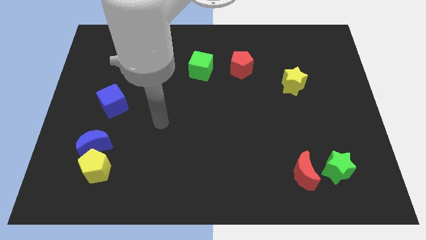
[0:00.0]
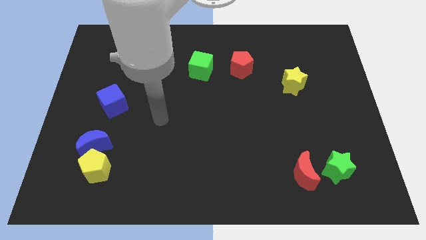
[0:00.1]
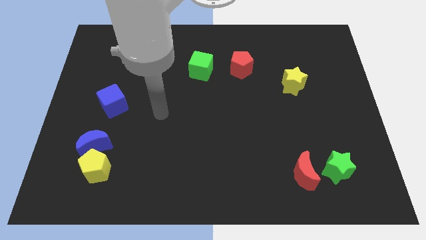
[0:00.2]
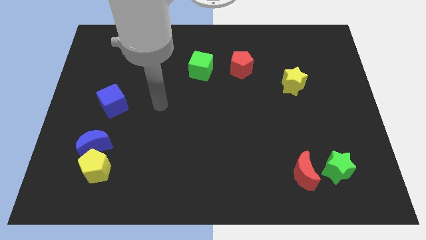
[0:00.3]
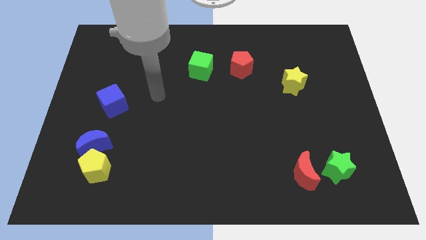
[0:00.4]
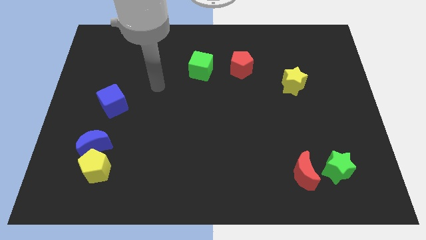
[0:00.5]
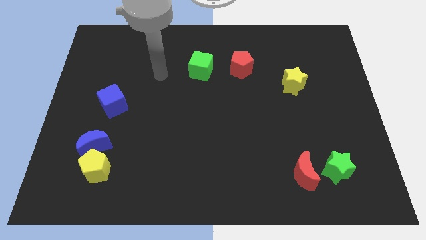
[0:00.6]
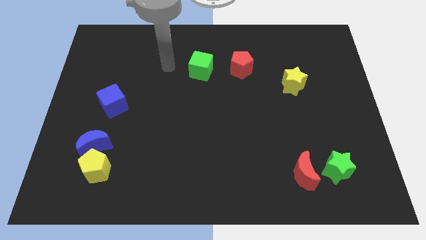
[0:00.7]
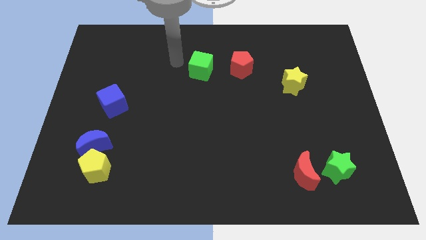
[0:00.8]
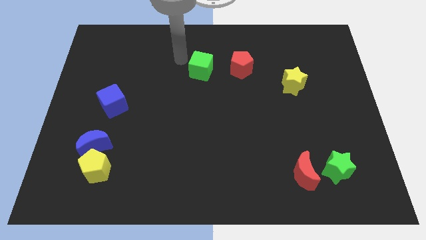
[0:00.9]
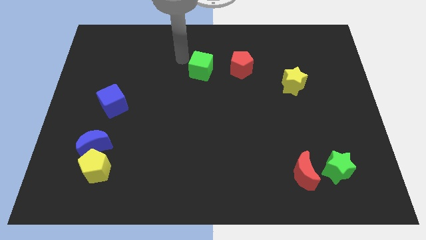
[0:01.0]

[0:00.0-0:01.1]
place the arm to the left of the green cube

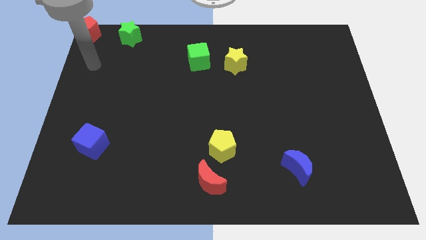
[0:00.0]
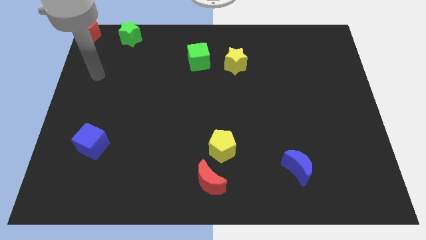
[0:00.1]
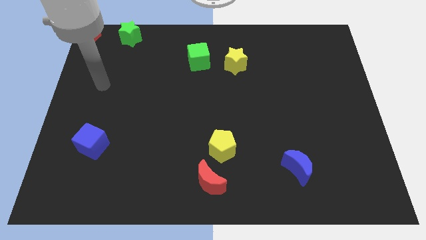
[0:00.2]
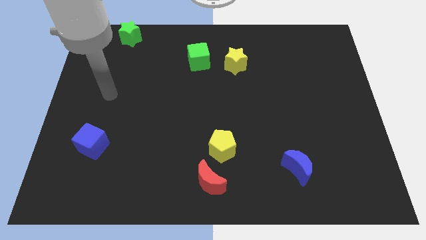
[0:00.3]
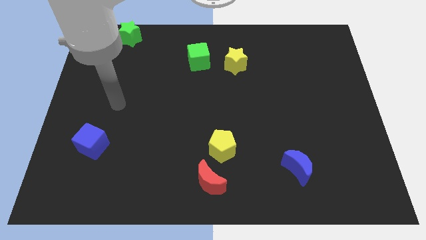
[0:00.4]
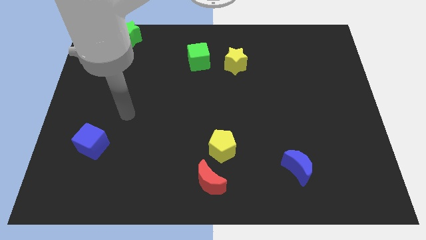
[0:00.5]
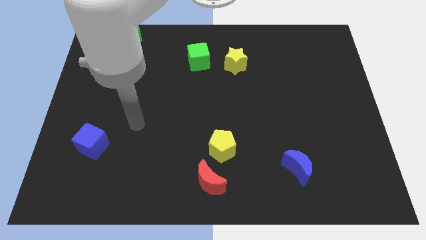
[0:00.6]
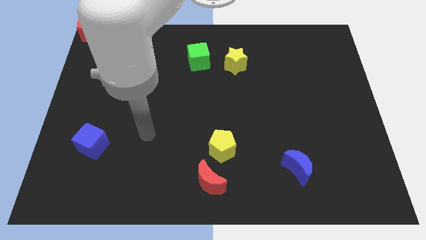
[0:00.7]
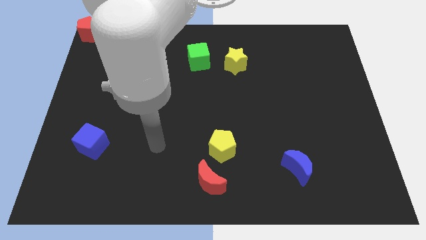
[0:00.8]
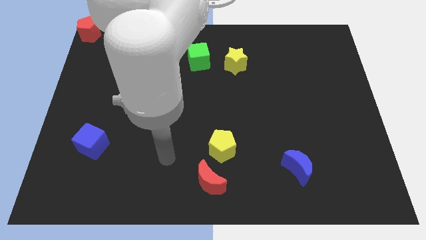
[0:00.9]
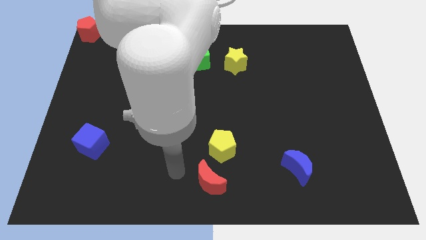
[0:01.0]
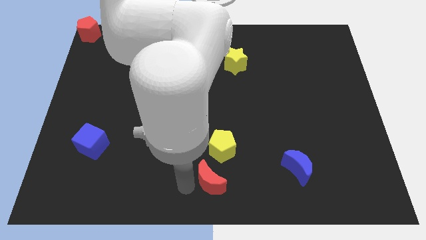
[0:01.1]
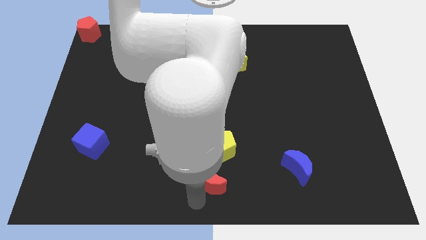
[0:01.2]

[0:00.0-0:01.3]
place your arm to the left side of the red moon

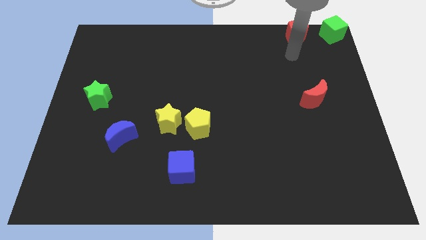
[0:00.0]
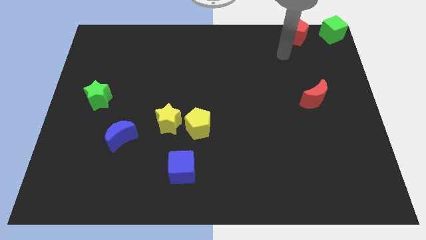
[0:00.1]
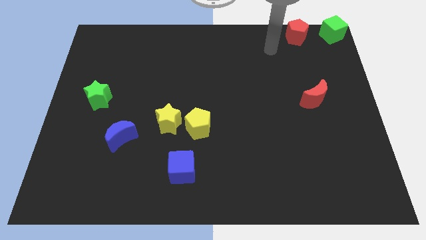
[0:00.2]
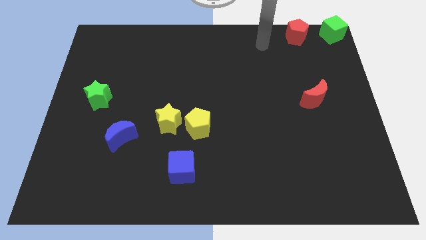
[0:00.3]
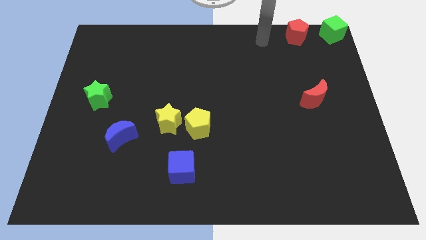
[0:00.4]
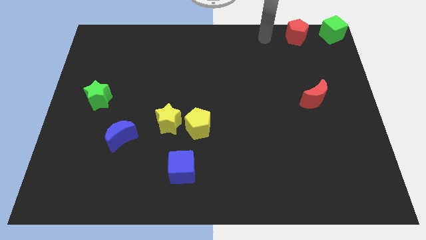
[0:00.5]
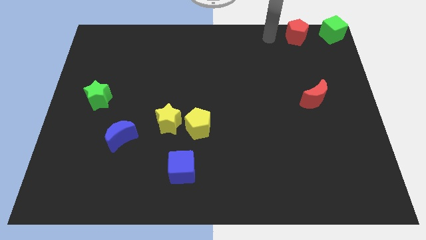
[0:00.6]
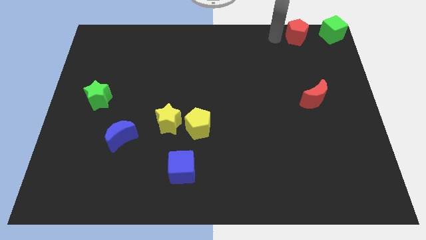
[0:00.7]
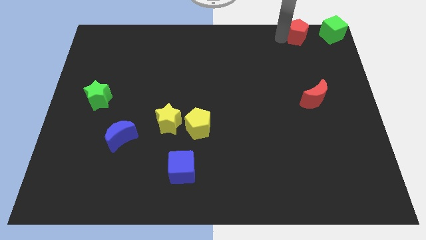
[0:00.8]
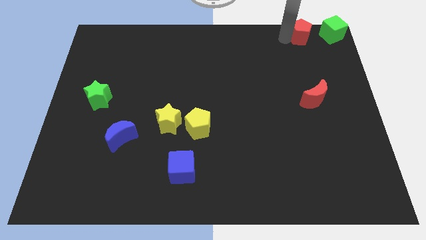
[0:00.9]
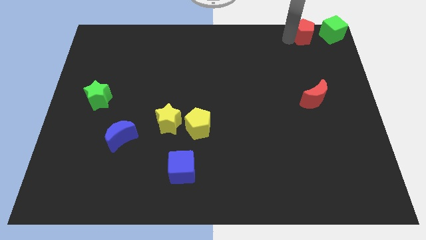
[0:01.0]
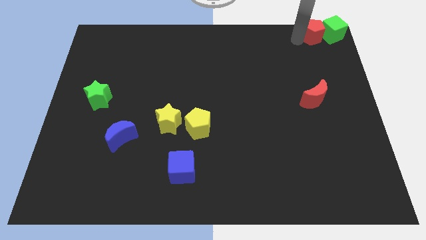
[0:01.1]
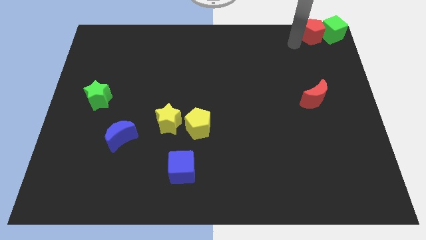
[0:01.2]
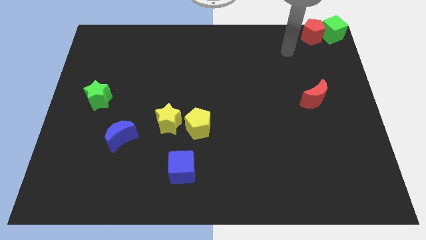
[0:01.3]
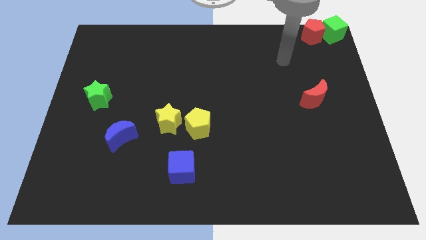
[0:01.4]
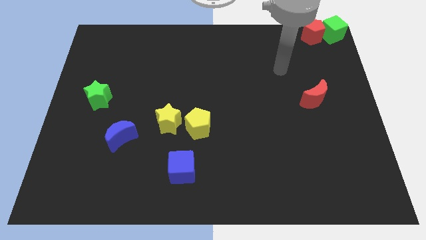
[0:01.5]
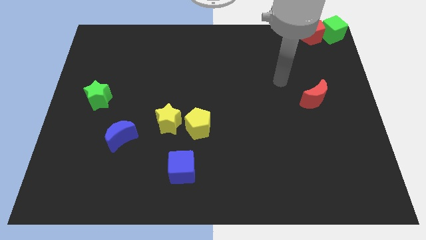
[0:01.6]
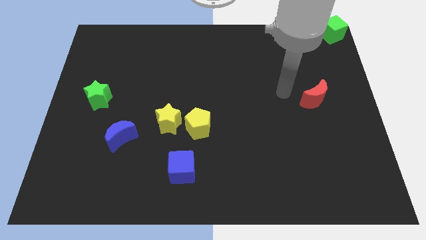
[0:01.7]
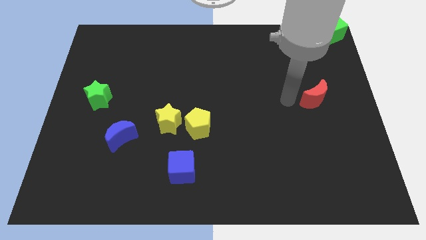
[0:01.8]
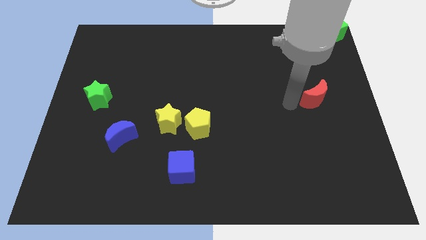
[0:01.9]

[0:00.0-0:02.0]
move the red pentagon to the left of green cube

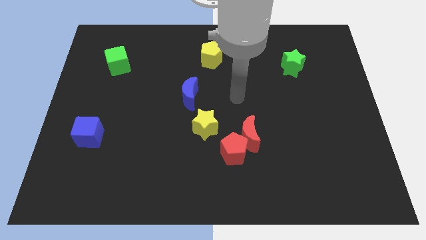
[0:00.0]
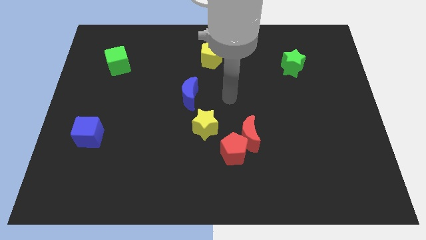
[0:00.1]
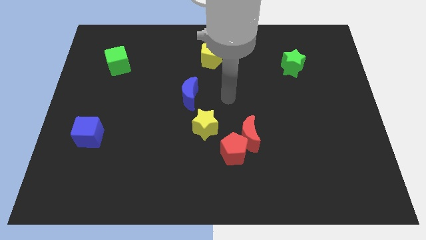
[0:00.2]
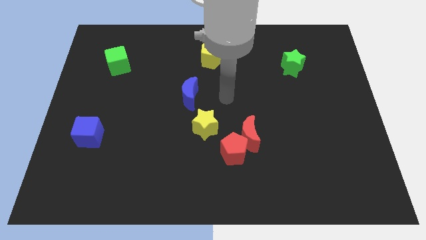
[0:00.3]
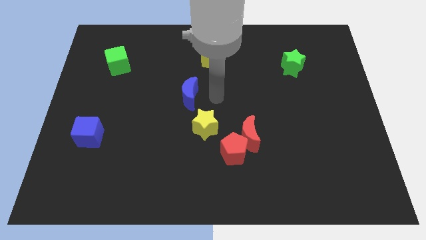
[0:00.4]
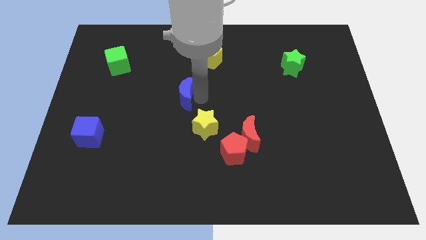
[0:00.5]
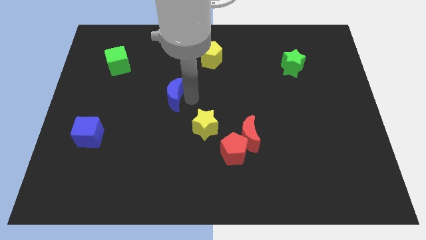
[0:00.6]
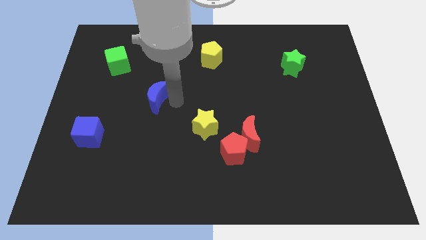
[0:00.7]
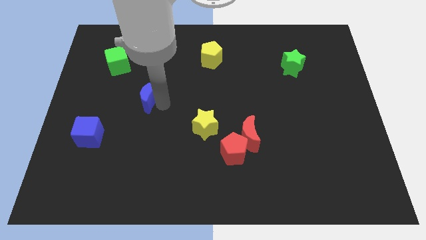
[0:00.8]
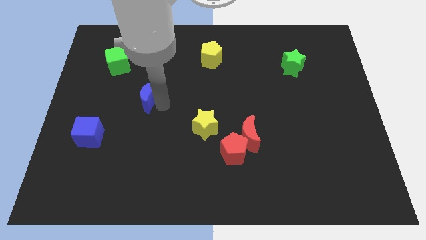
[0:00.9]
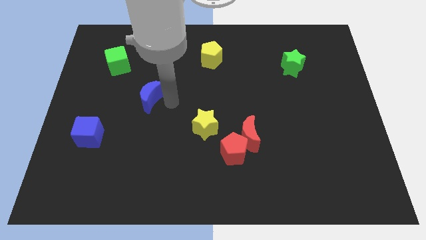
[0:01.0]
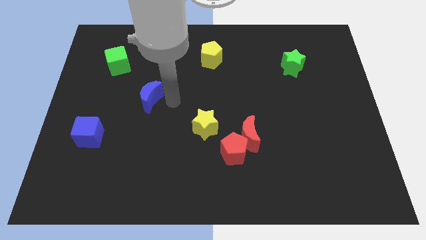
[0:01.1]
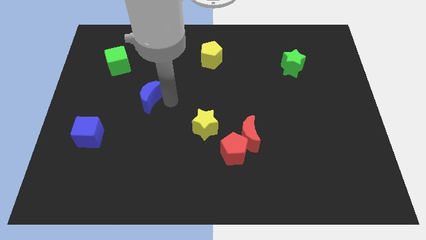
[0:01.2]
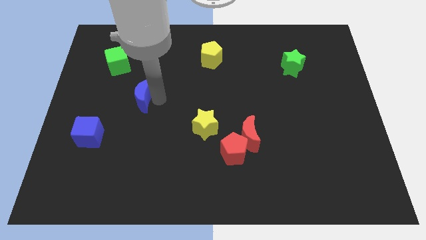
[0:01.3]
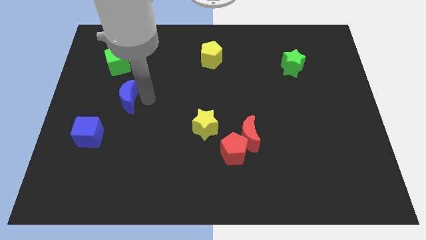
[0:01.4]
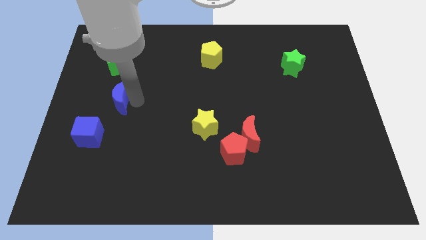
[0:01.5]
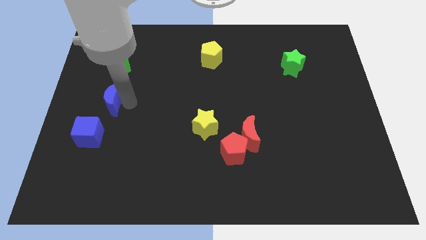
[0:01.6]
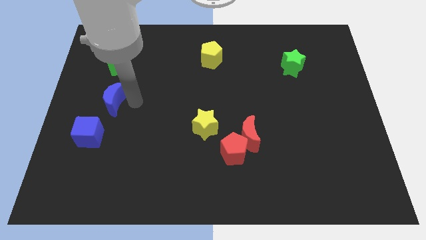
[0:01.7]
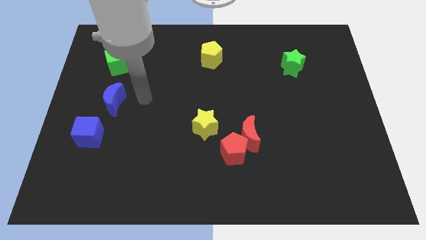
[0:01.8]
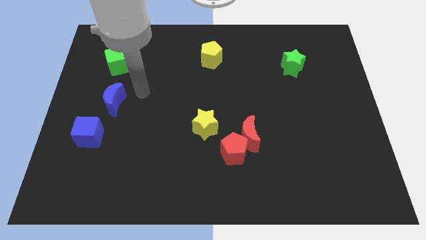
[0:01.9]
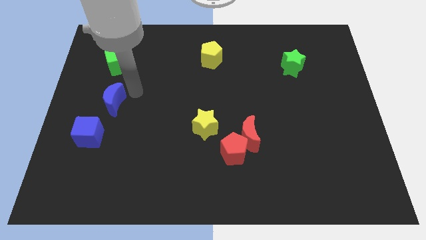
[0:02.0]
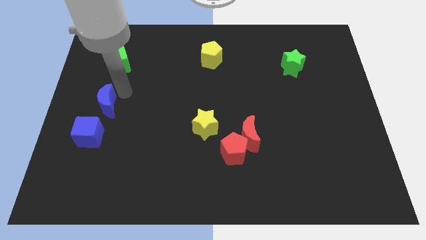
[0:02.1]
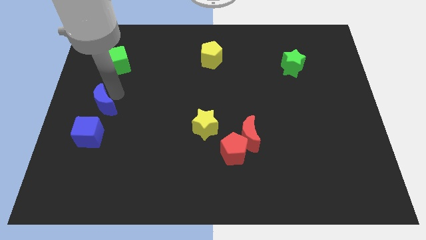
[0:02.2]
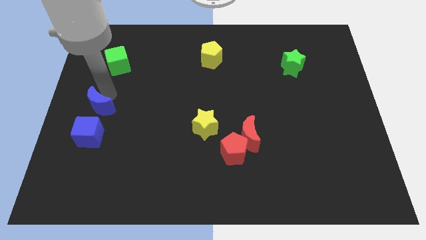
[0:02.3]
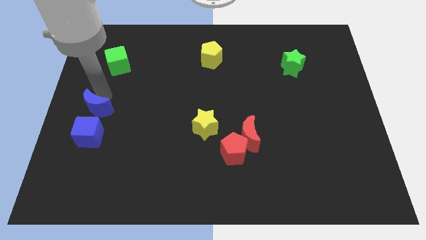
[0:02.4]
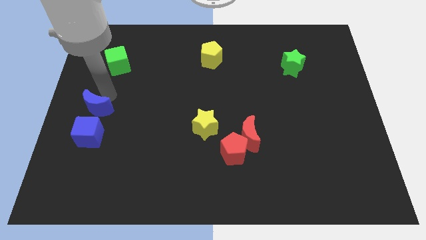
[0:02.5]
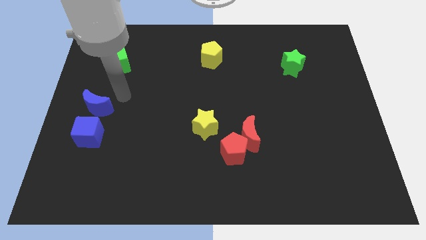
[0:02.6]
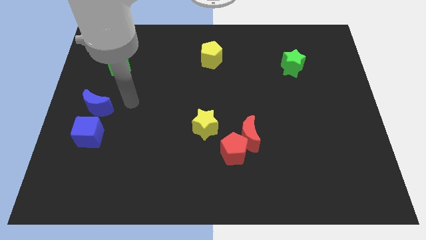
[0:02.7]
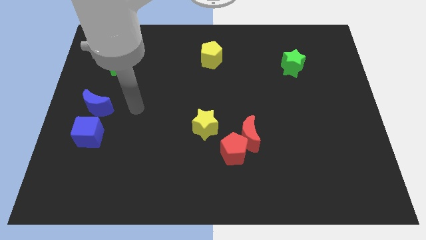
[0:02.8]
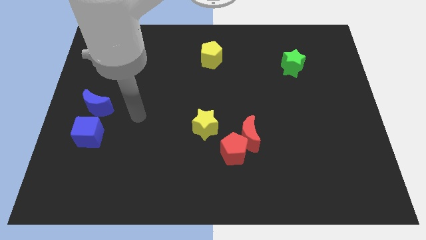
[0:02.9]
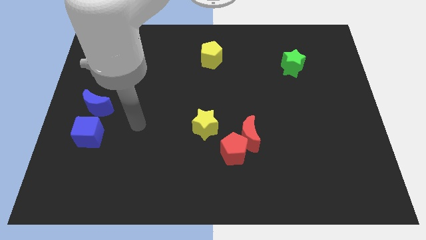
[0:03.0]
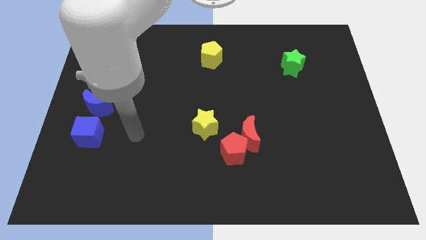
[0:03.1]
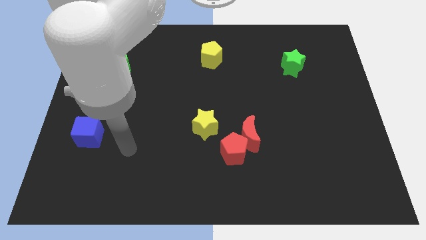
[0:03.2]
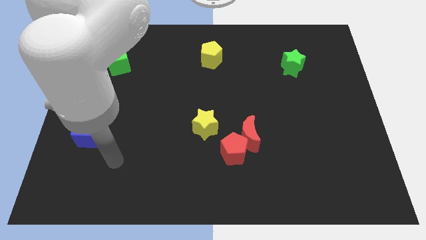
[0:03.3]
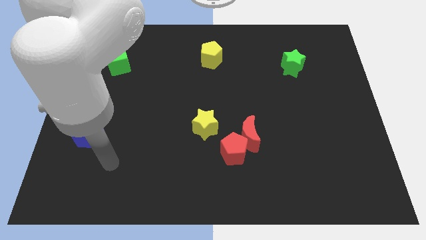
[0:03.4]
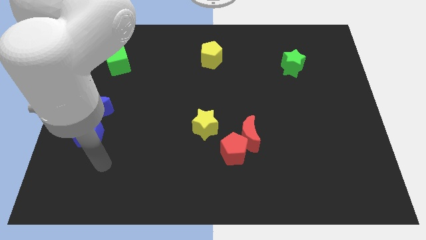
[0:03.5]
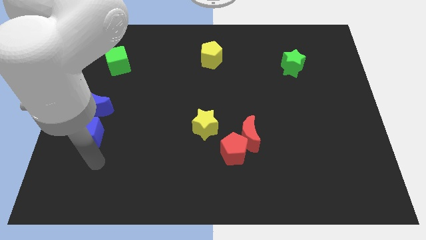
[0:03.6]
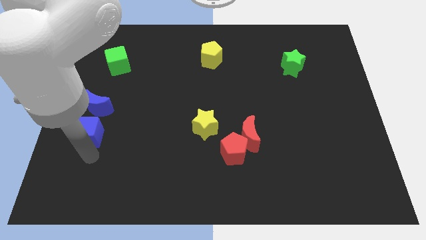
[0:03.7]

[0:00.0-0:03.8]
place the blue moon in between the green cube and blue cube

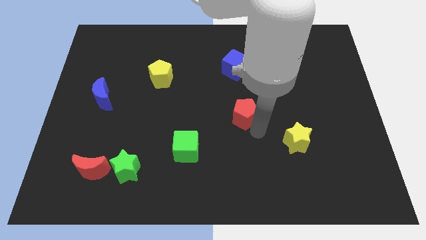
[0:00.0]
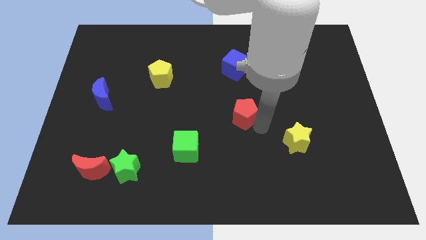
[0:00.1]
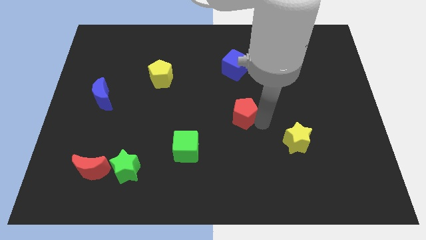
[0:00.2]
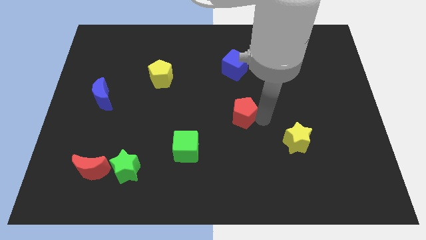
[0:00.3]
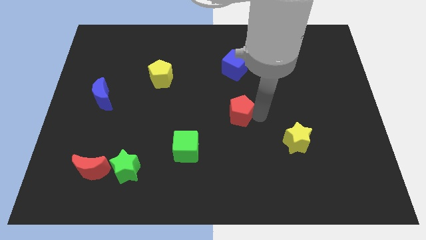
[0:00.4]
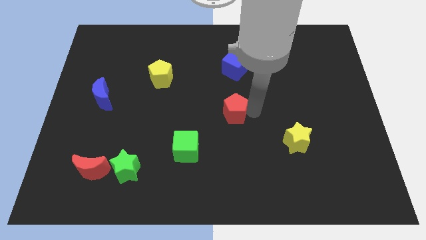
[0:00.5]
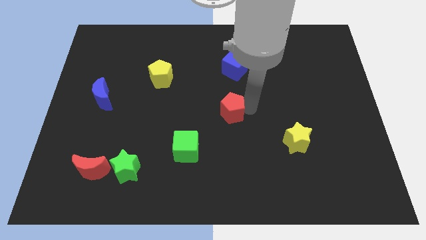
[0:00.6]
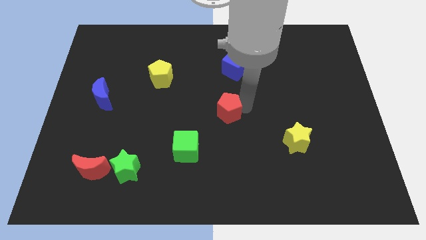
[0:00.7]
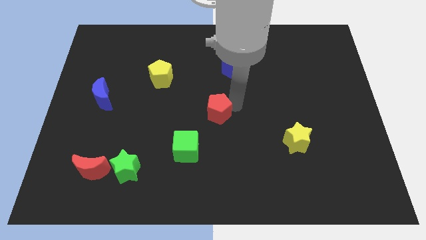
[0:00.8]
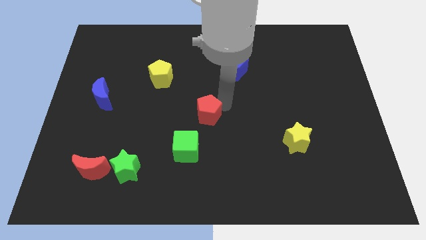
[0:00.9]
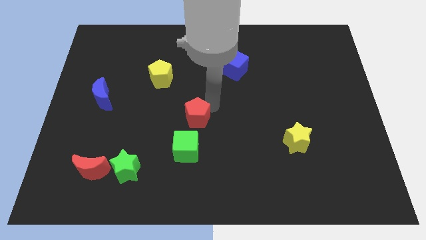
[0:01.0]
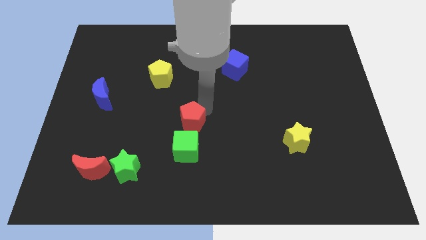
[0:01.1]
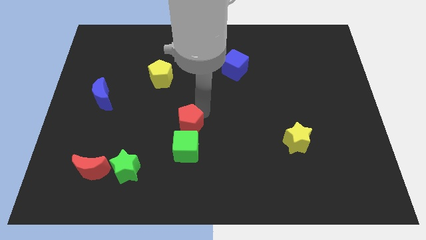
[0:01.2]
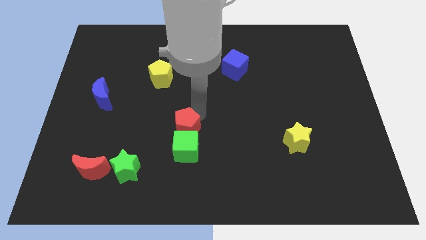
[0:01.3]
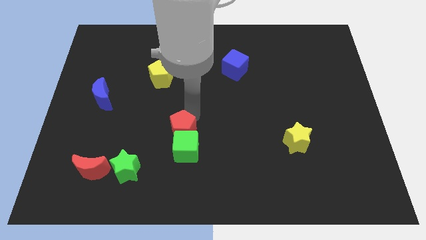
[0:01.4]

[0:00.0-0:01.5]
place the red pentagon at the top of the green cube
